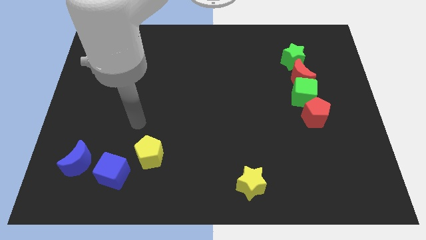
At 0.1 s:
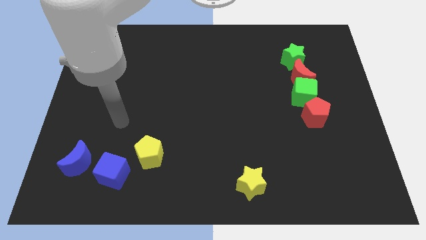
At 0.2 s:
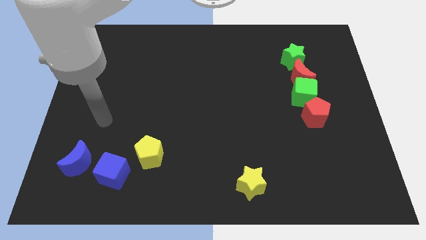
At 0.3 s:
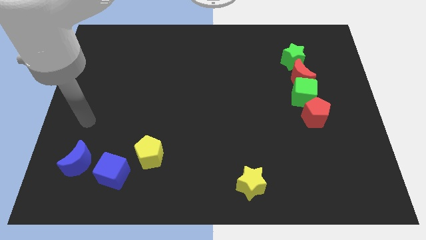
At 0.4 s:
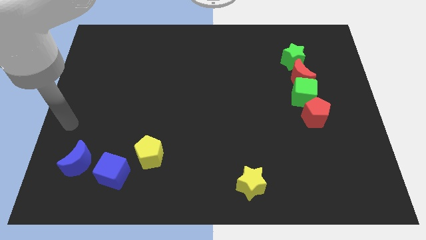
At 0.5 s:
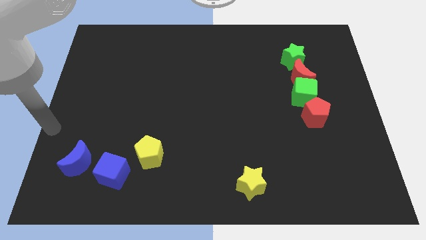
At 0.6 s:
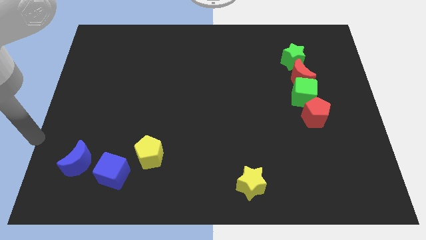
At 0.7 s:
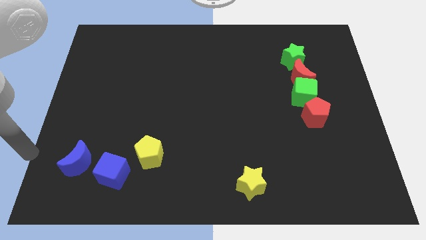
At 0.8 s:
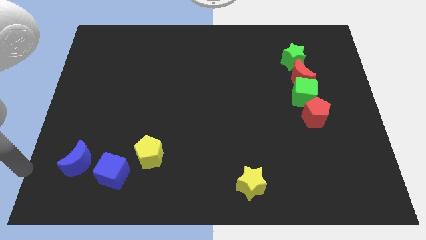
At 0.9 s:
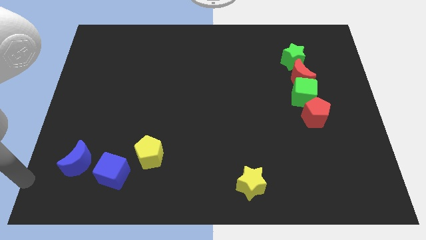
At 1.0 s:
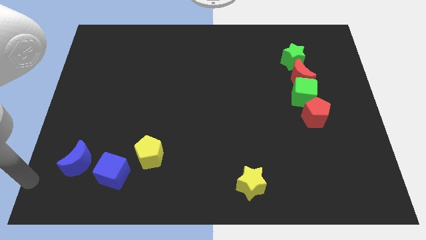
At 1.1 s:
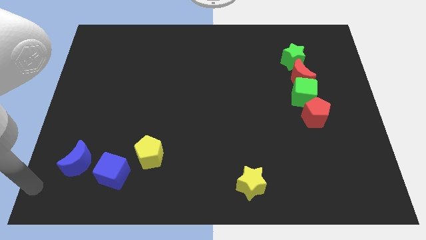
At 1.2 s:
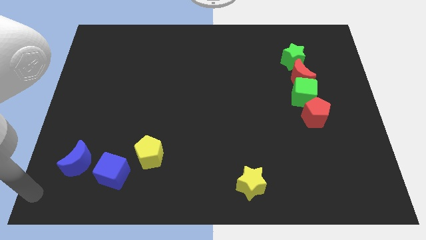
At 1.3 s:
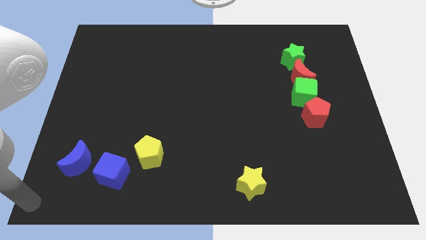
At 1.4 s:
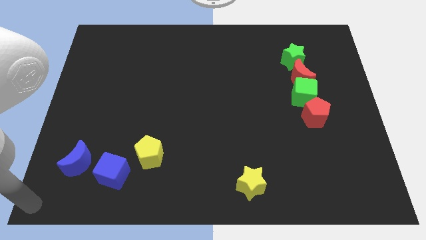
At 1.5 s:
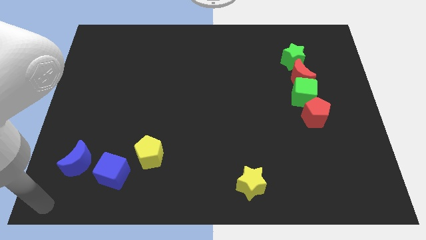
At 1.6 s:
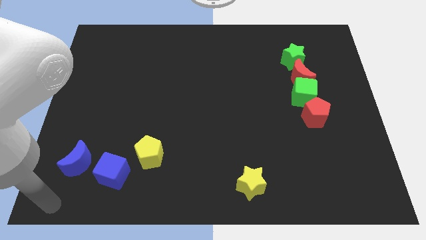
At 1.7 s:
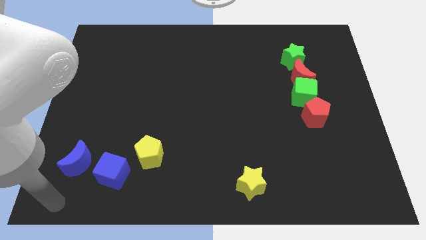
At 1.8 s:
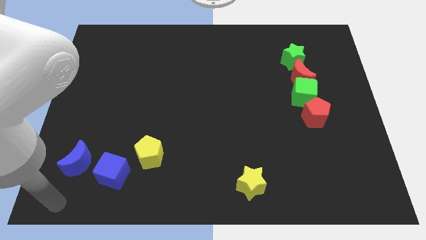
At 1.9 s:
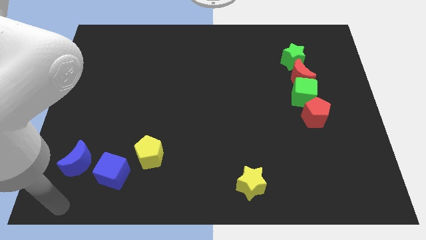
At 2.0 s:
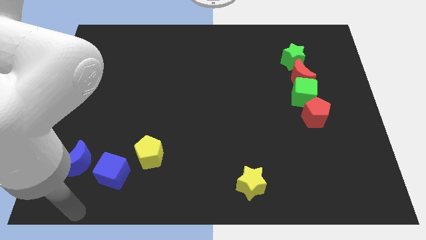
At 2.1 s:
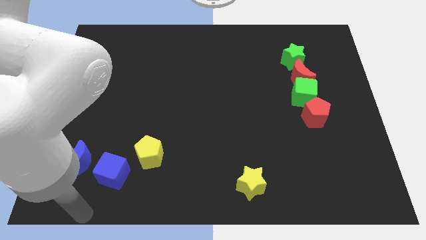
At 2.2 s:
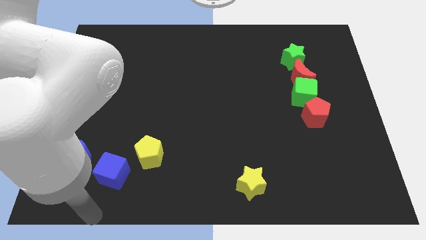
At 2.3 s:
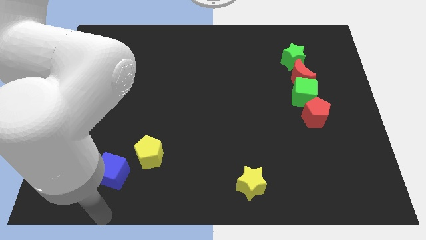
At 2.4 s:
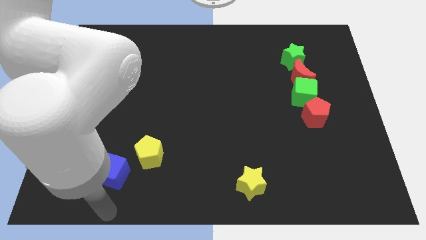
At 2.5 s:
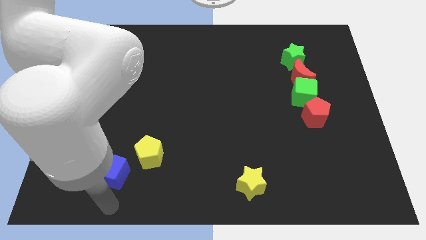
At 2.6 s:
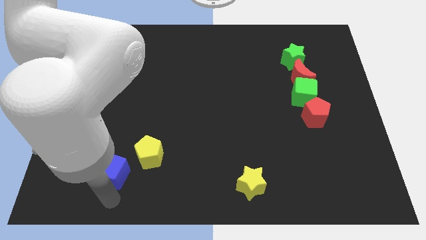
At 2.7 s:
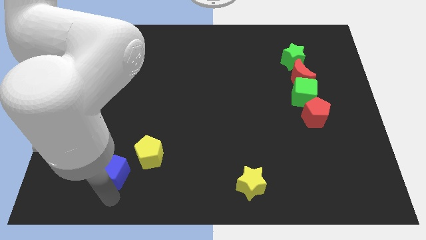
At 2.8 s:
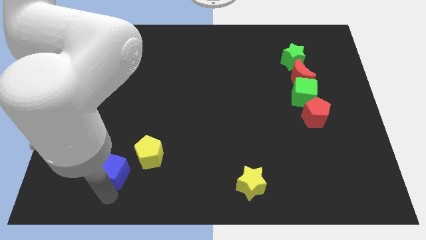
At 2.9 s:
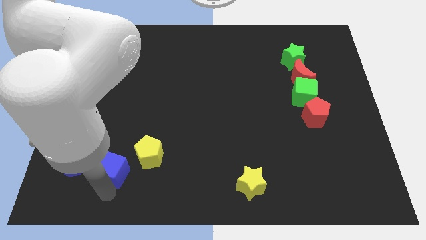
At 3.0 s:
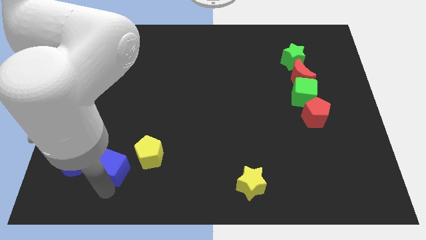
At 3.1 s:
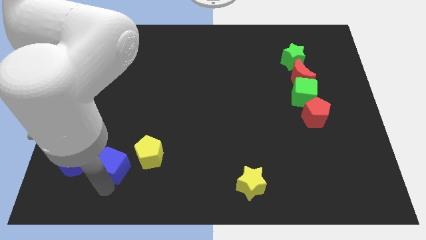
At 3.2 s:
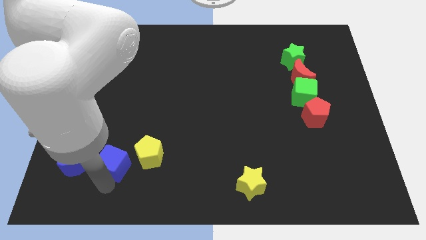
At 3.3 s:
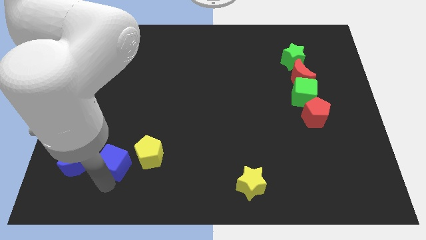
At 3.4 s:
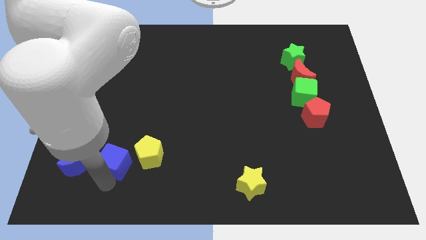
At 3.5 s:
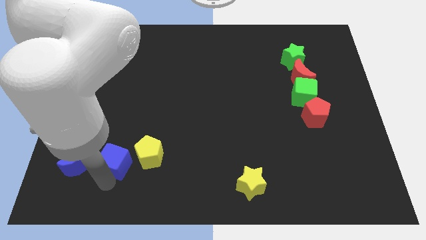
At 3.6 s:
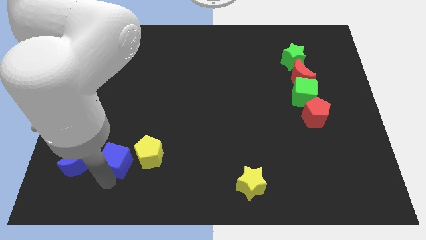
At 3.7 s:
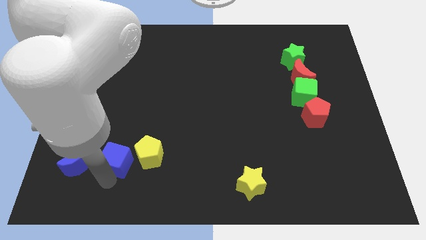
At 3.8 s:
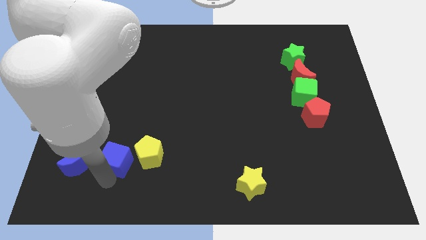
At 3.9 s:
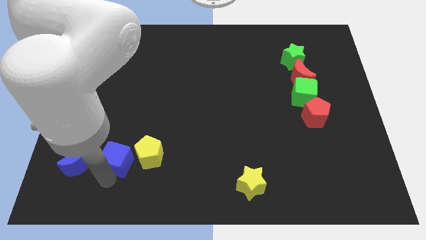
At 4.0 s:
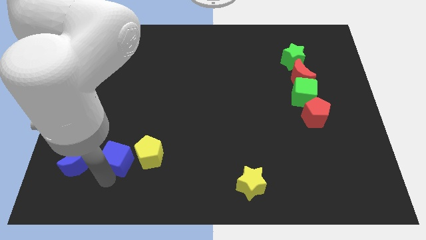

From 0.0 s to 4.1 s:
place the blue cube in between the yellow pentagon and the blue crescent

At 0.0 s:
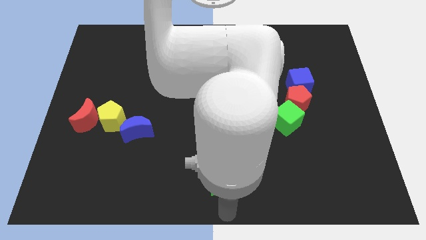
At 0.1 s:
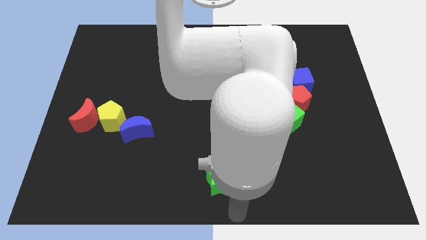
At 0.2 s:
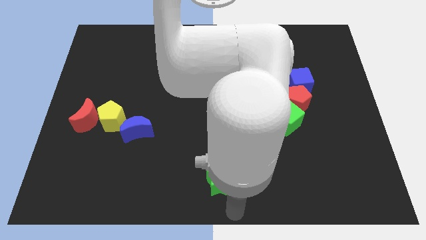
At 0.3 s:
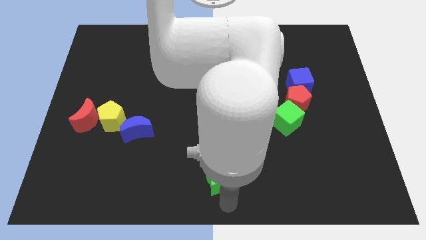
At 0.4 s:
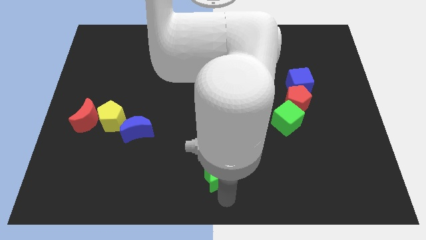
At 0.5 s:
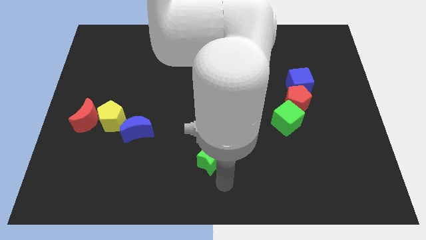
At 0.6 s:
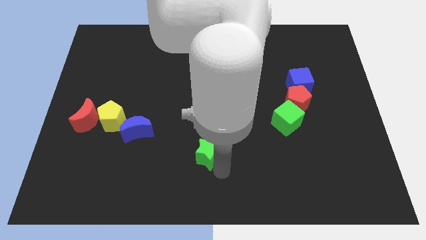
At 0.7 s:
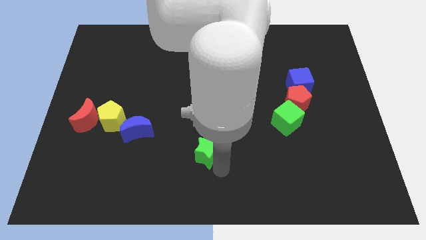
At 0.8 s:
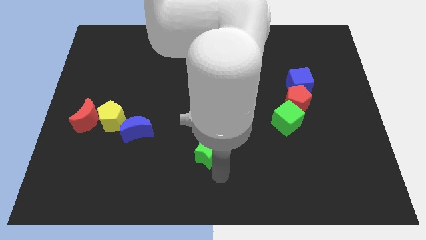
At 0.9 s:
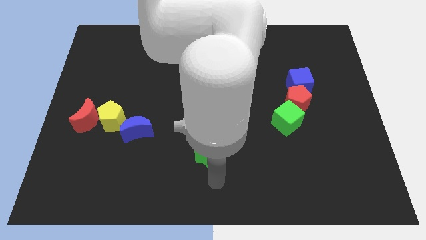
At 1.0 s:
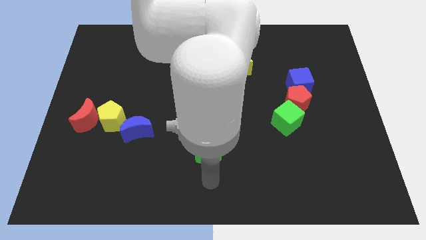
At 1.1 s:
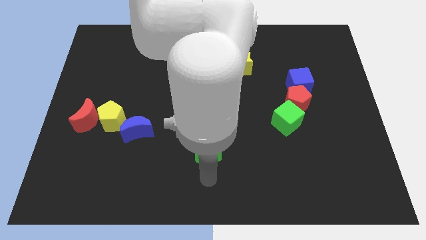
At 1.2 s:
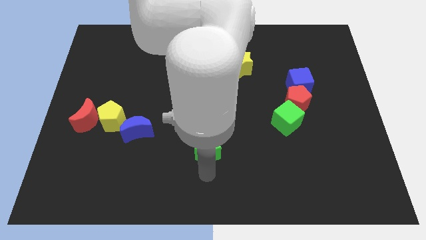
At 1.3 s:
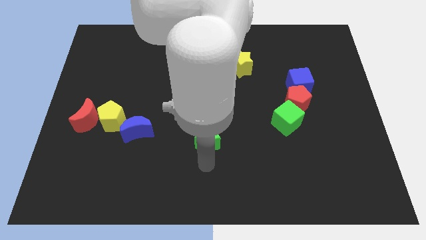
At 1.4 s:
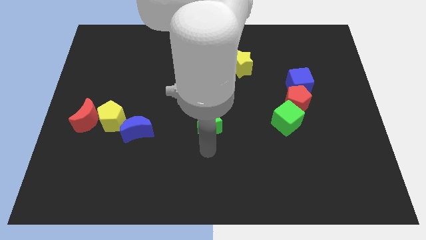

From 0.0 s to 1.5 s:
move the green star to the right side of the blue moon

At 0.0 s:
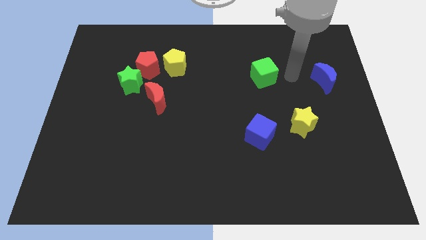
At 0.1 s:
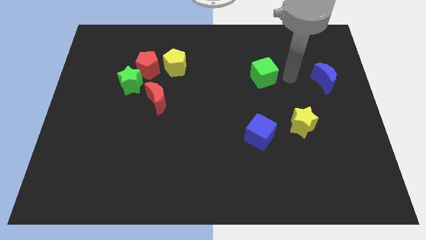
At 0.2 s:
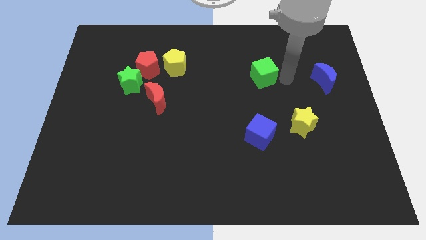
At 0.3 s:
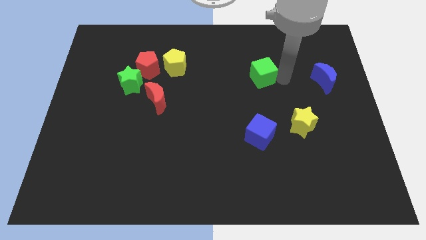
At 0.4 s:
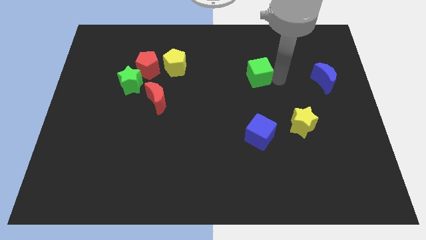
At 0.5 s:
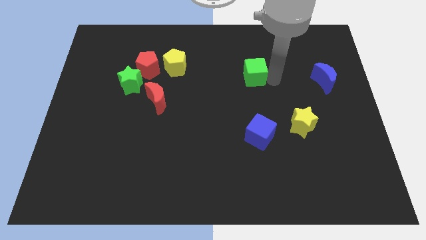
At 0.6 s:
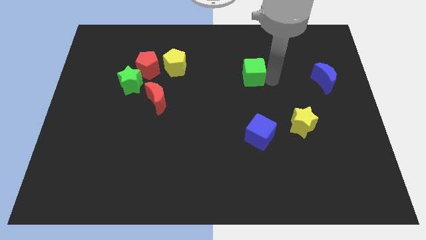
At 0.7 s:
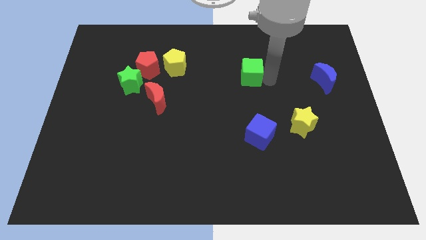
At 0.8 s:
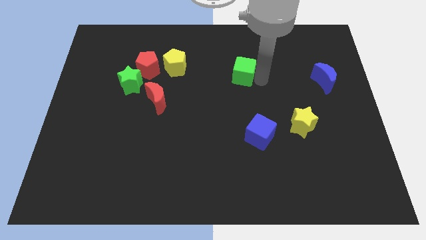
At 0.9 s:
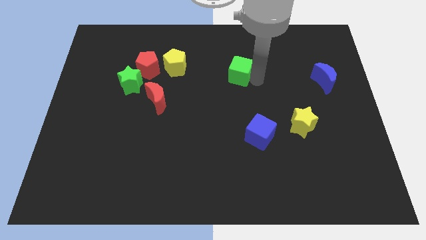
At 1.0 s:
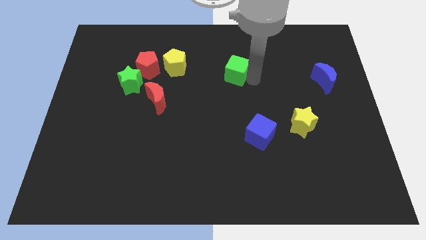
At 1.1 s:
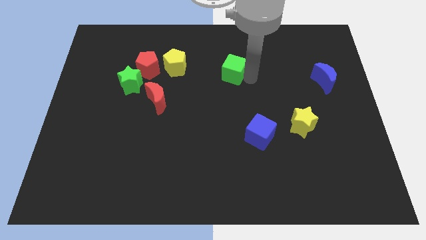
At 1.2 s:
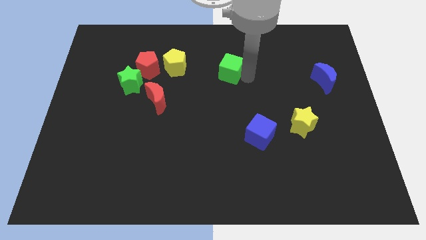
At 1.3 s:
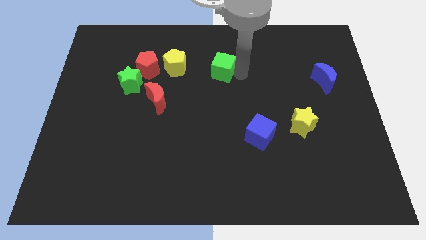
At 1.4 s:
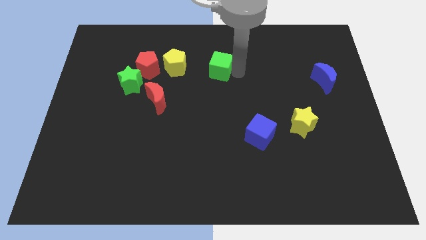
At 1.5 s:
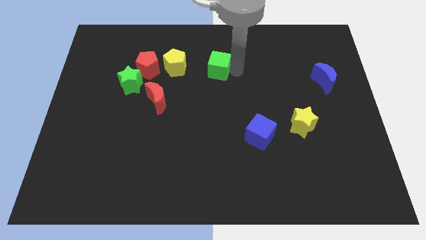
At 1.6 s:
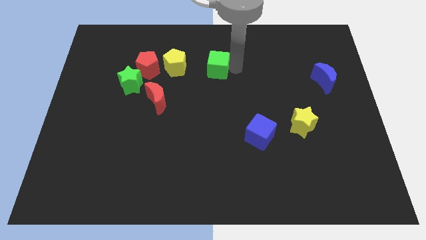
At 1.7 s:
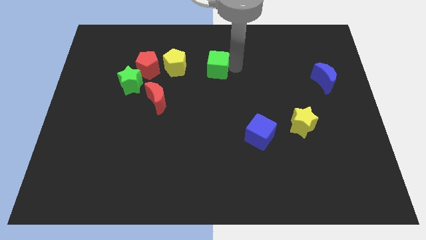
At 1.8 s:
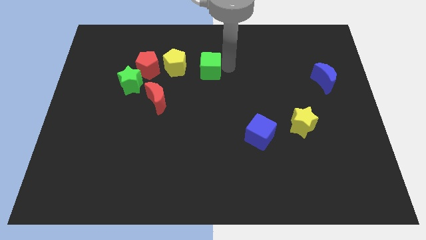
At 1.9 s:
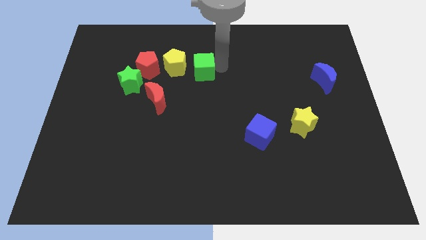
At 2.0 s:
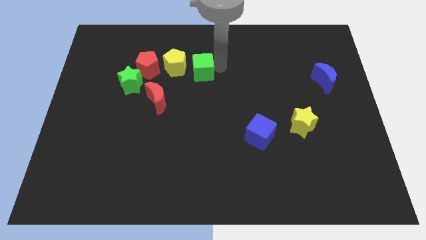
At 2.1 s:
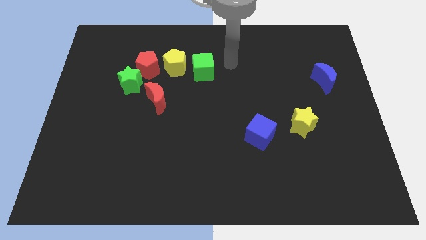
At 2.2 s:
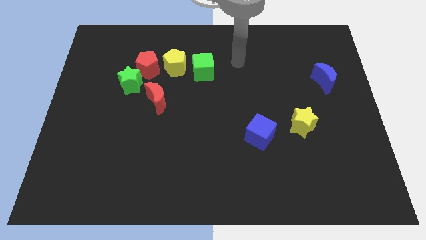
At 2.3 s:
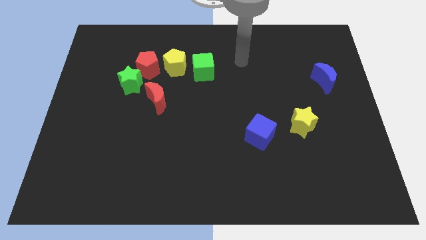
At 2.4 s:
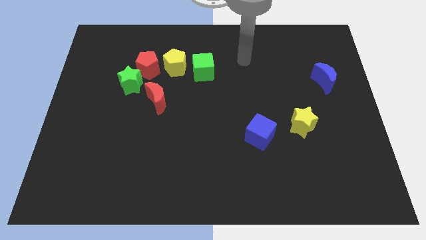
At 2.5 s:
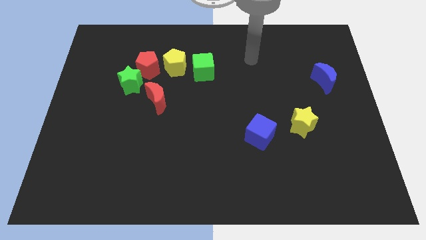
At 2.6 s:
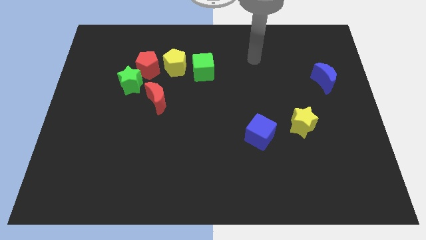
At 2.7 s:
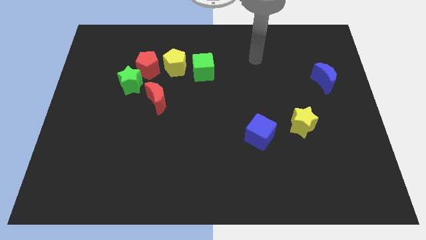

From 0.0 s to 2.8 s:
place the green cube right to the yellow pentagon

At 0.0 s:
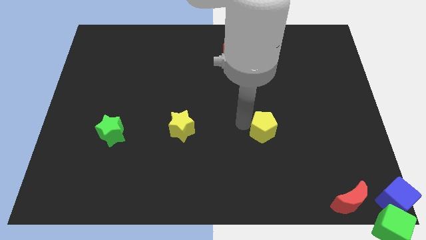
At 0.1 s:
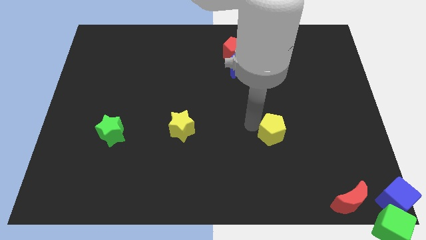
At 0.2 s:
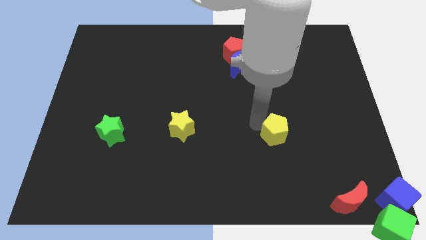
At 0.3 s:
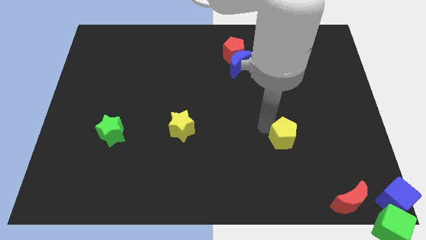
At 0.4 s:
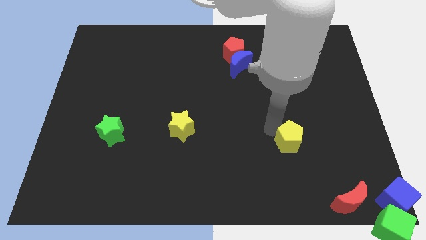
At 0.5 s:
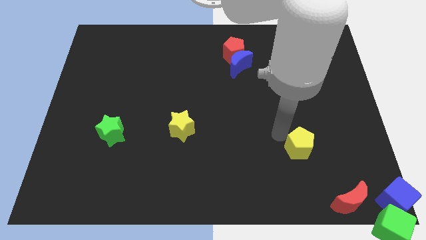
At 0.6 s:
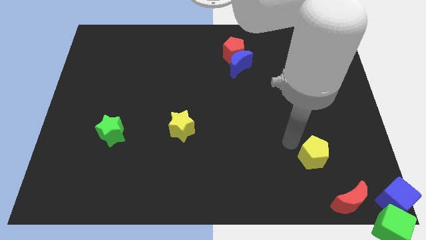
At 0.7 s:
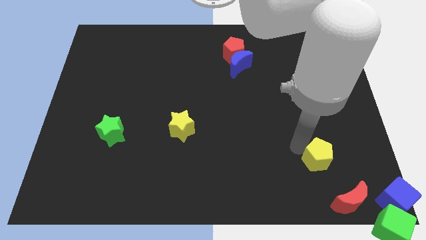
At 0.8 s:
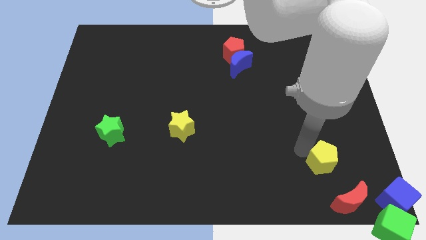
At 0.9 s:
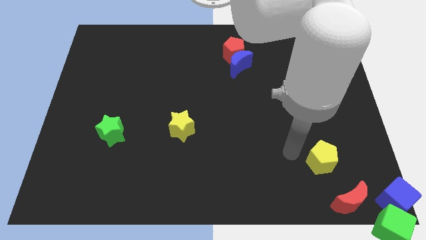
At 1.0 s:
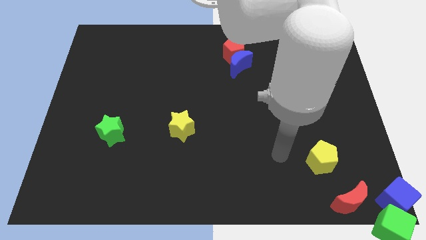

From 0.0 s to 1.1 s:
place the yellow pentagon above the red moon
